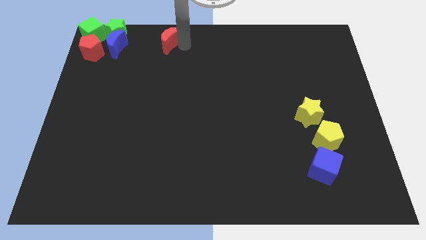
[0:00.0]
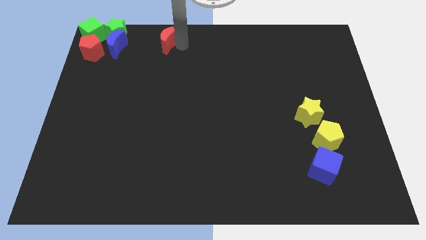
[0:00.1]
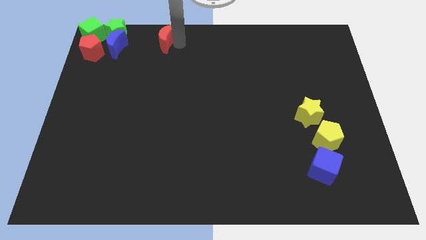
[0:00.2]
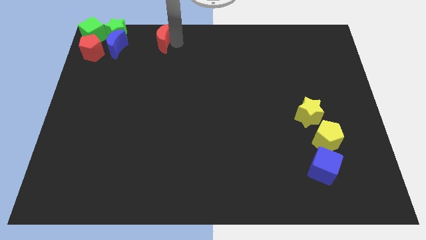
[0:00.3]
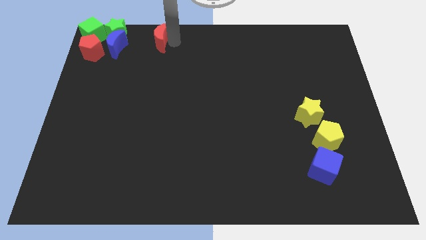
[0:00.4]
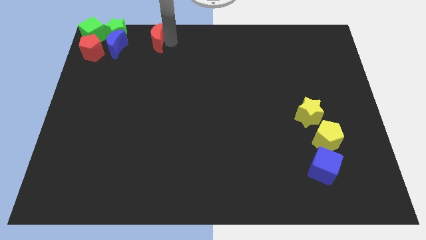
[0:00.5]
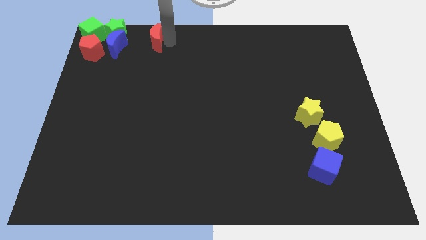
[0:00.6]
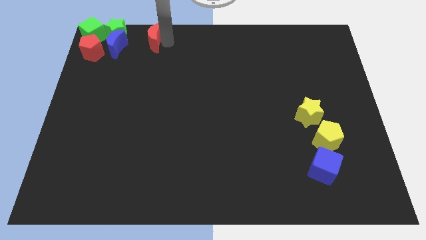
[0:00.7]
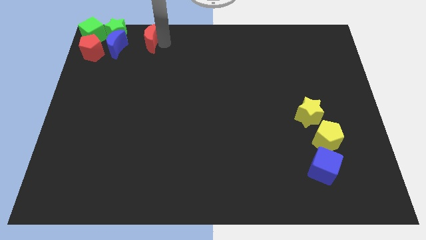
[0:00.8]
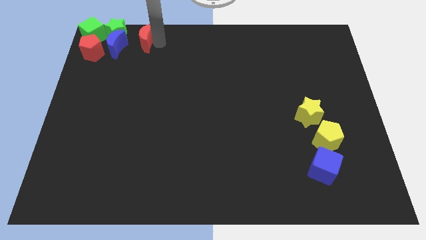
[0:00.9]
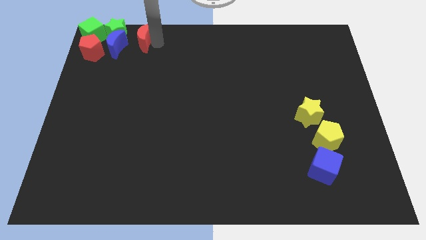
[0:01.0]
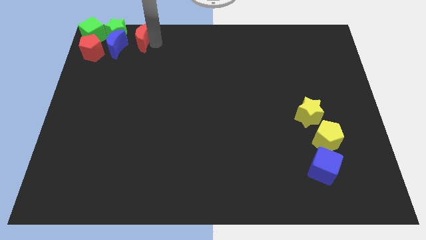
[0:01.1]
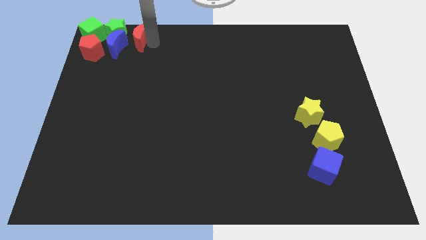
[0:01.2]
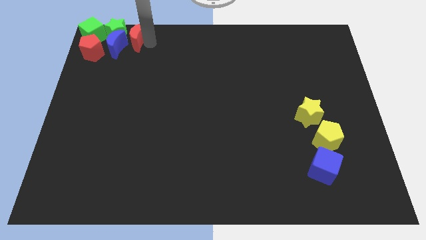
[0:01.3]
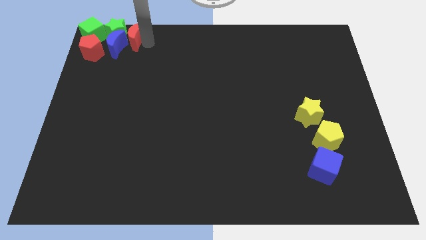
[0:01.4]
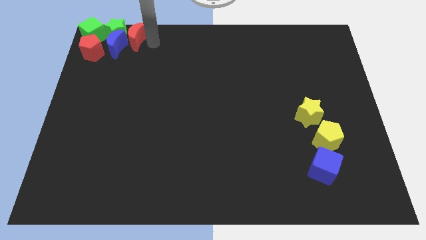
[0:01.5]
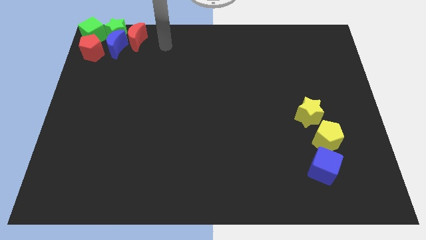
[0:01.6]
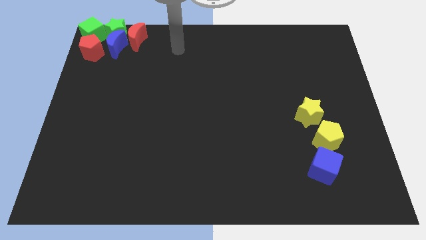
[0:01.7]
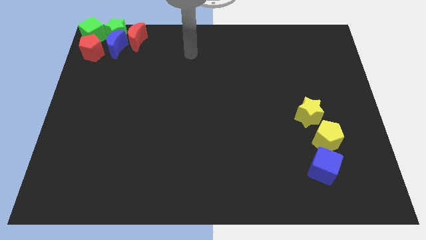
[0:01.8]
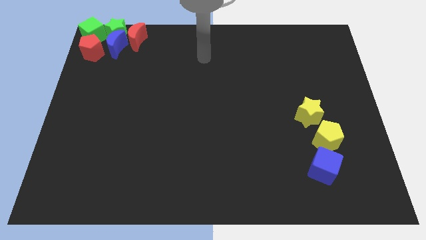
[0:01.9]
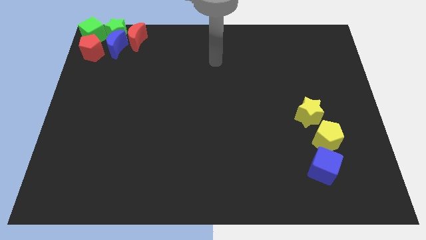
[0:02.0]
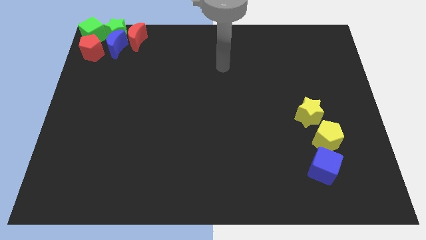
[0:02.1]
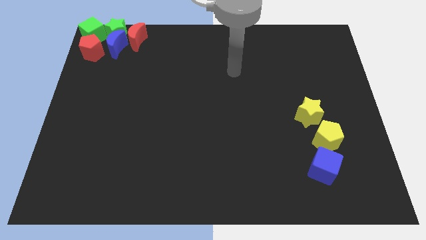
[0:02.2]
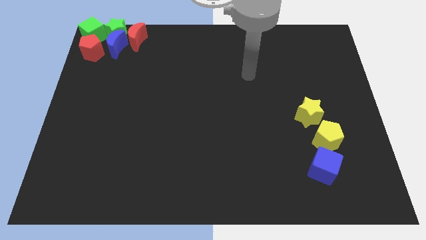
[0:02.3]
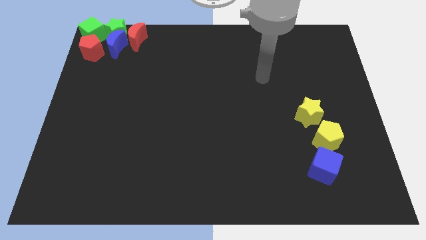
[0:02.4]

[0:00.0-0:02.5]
move the red crescent to the top left center of the board

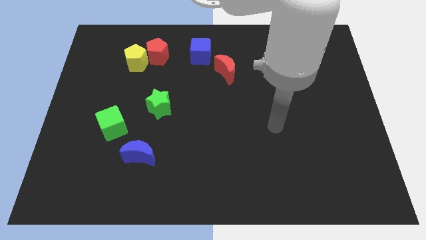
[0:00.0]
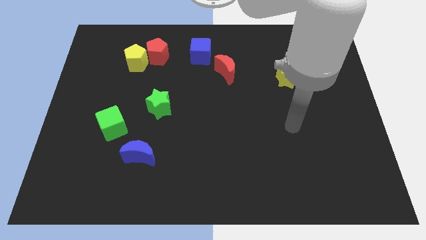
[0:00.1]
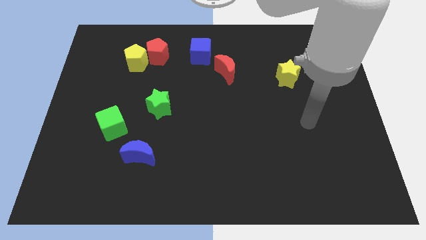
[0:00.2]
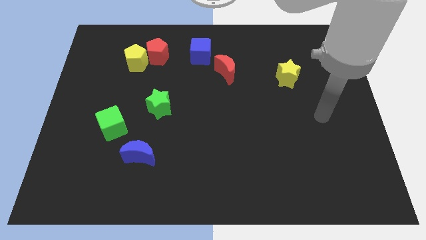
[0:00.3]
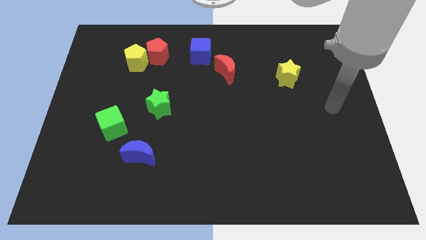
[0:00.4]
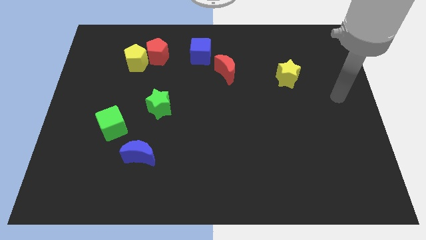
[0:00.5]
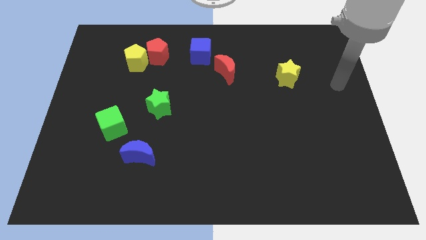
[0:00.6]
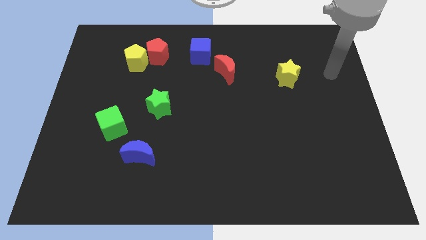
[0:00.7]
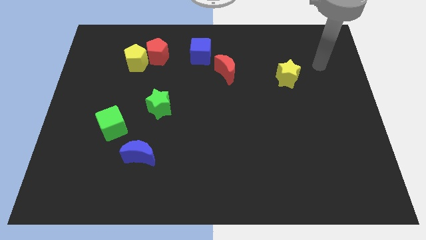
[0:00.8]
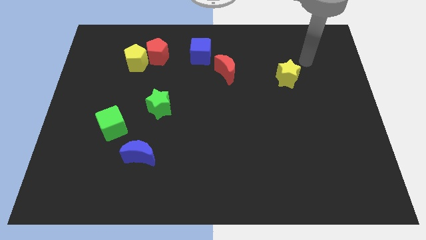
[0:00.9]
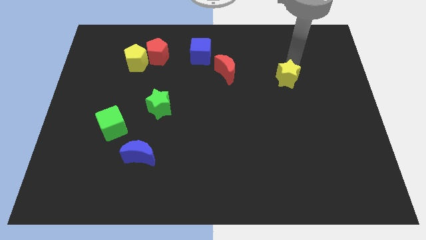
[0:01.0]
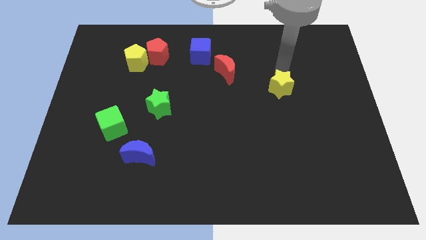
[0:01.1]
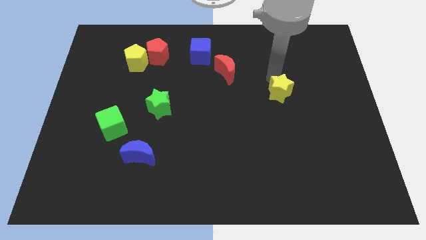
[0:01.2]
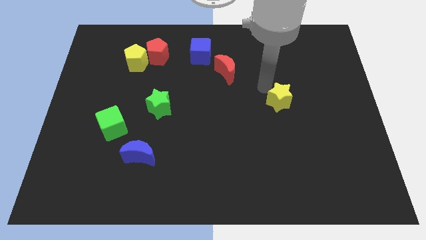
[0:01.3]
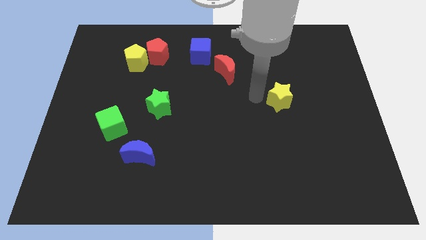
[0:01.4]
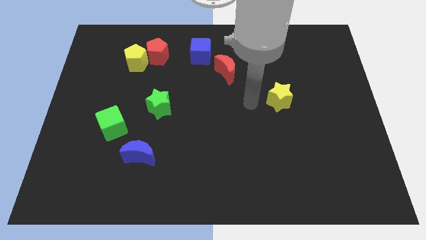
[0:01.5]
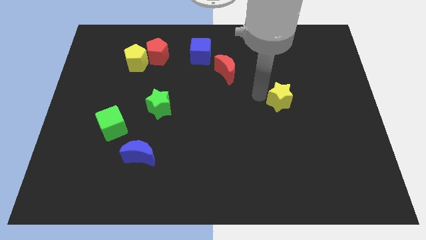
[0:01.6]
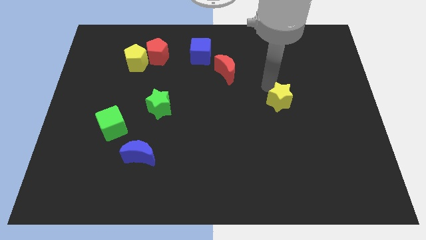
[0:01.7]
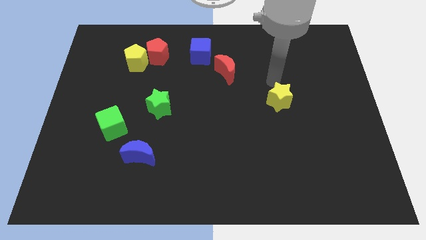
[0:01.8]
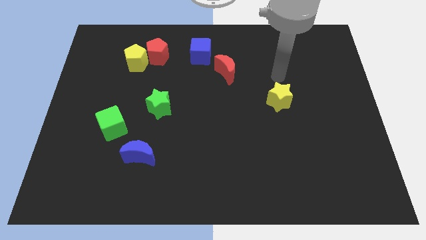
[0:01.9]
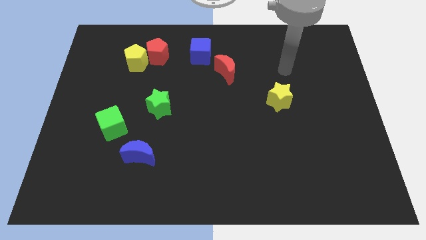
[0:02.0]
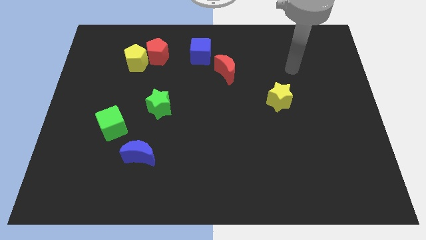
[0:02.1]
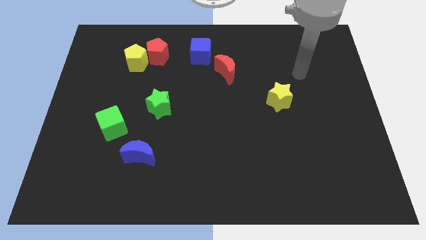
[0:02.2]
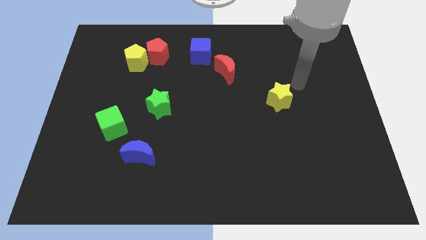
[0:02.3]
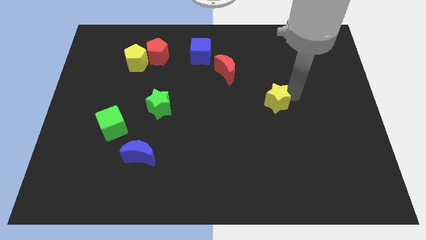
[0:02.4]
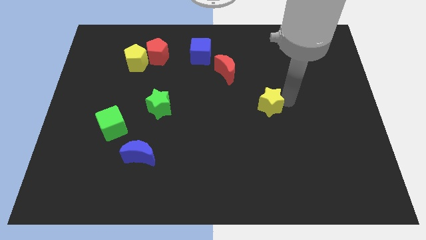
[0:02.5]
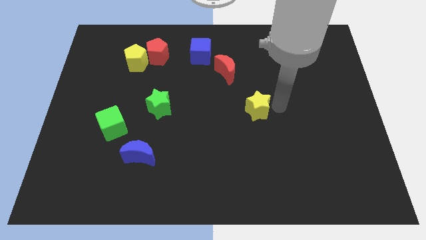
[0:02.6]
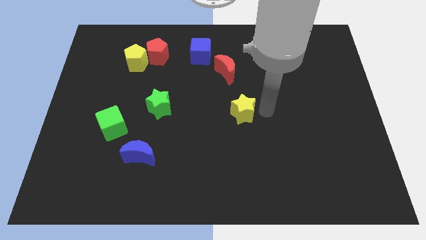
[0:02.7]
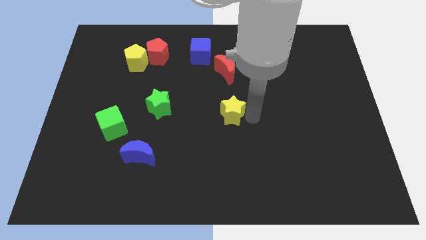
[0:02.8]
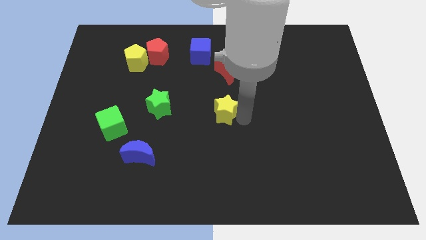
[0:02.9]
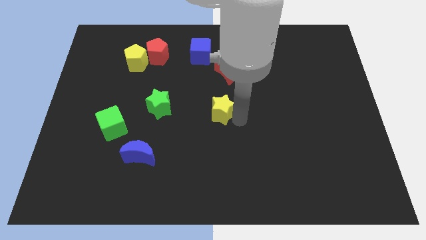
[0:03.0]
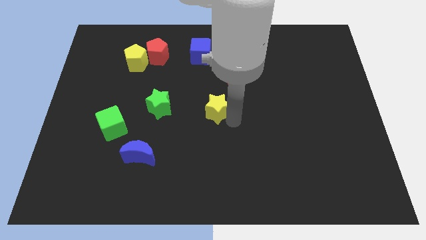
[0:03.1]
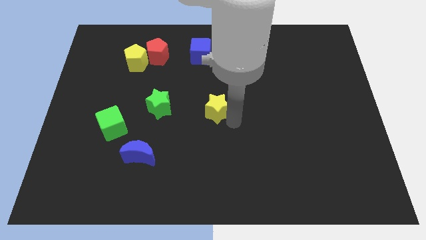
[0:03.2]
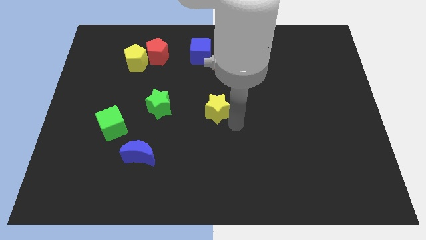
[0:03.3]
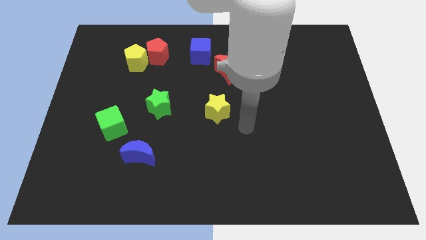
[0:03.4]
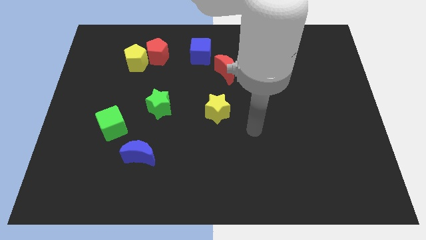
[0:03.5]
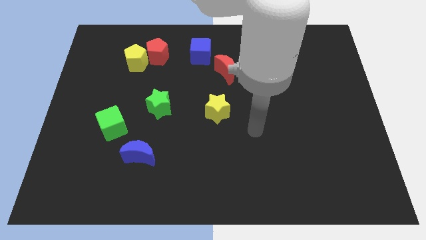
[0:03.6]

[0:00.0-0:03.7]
push the yellow star diagonally top right to blue moon

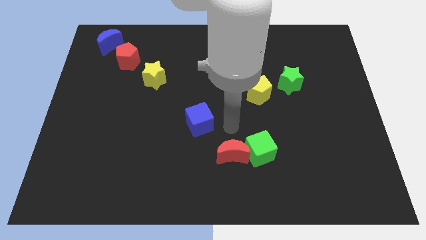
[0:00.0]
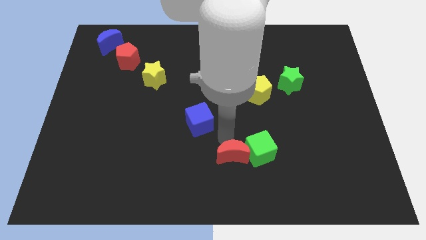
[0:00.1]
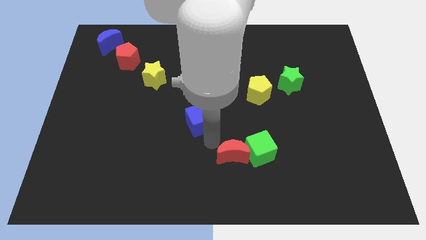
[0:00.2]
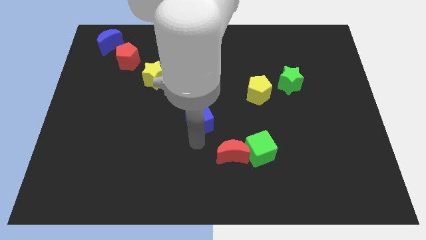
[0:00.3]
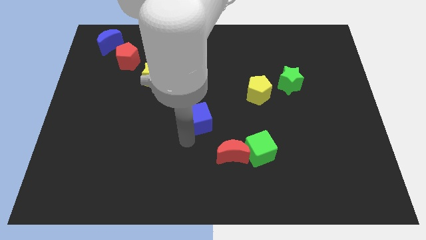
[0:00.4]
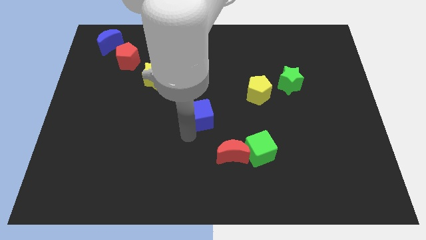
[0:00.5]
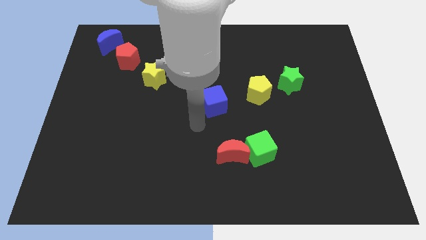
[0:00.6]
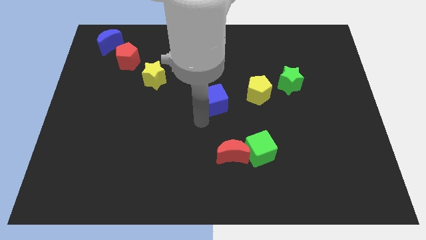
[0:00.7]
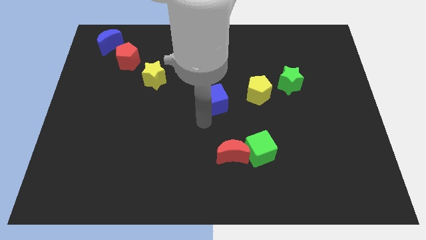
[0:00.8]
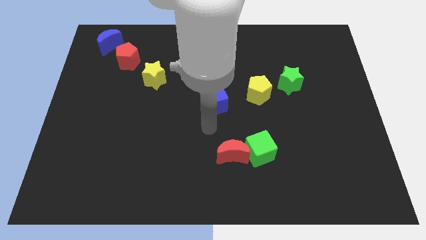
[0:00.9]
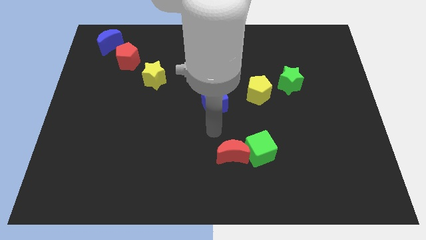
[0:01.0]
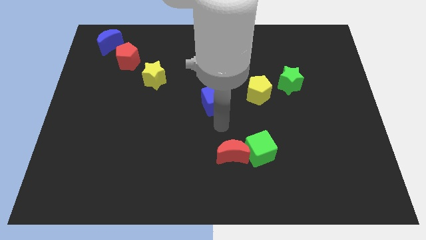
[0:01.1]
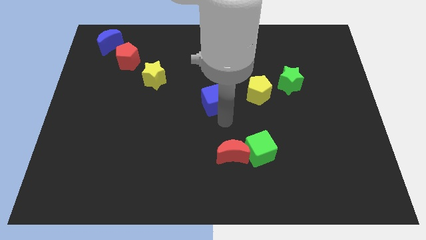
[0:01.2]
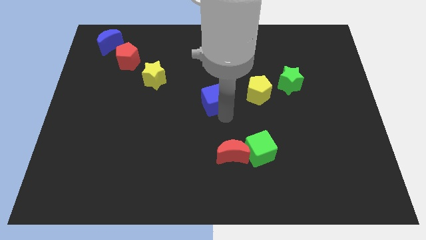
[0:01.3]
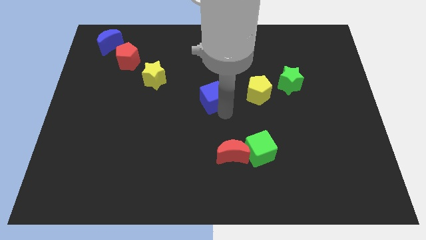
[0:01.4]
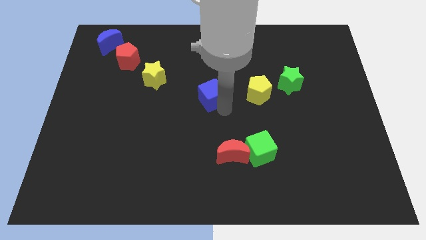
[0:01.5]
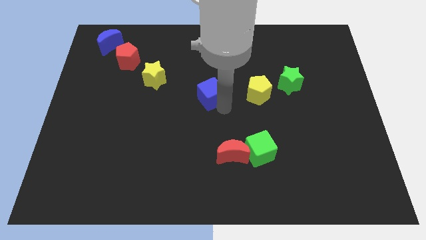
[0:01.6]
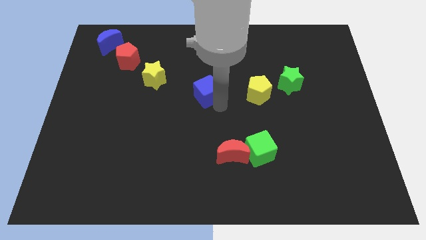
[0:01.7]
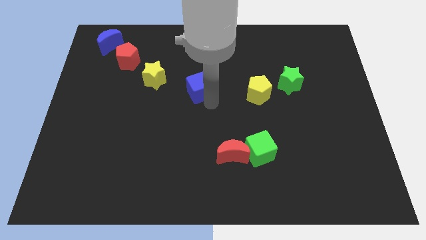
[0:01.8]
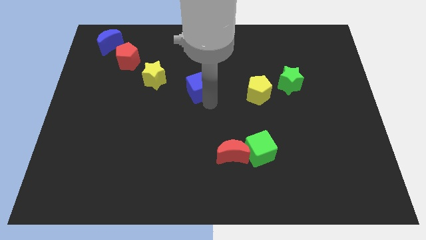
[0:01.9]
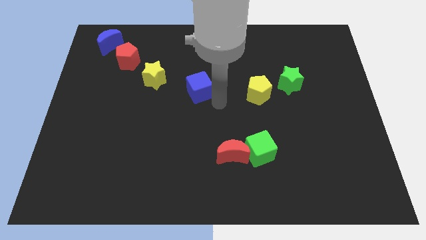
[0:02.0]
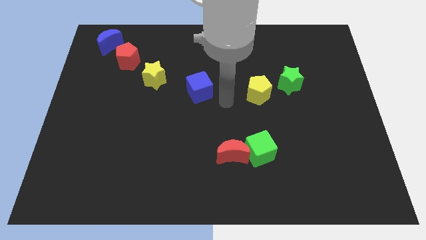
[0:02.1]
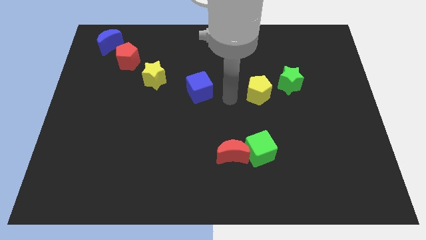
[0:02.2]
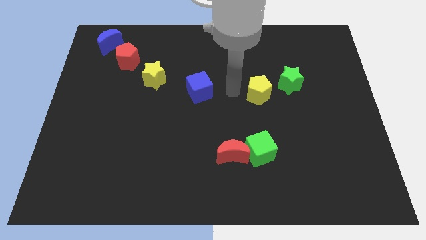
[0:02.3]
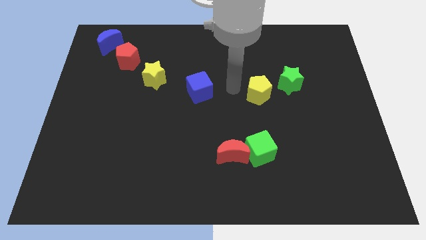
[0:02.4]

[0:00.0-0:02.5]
push blue cube upwards

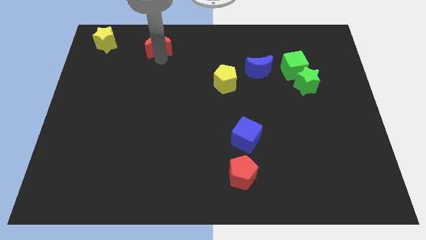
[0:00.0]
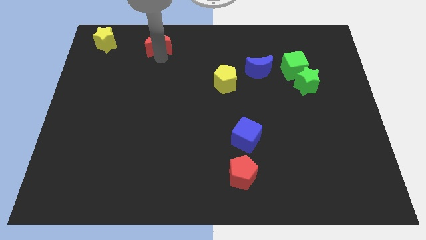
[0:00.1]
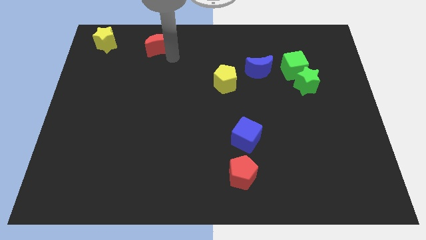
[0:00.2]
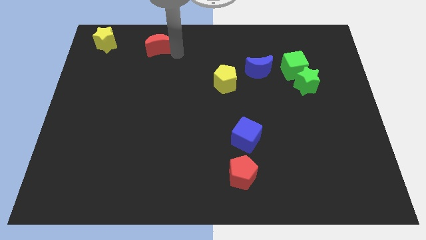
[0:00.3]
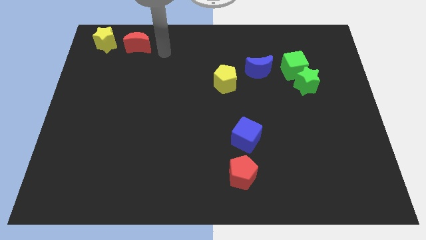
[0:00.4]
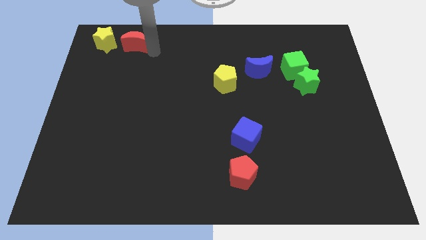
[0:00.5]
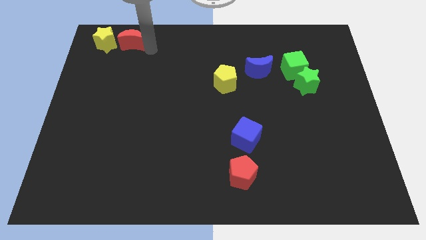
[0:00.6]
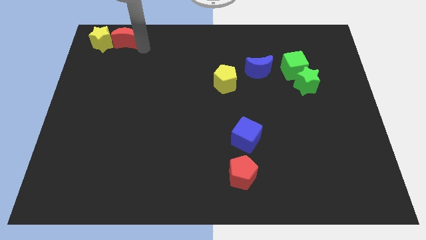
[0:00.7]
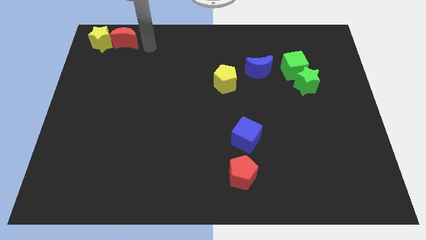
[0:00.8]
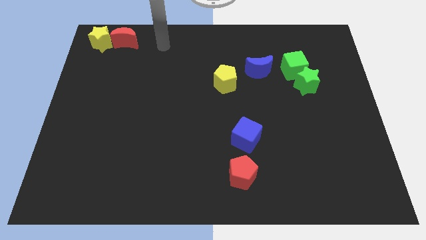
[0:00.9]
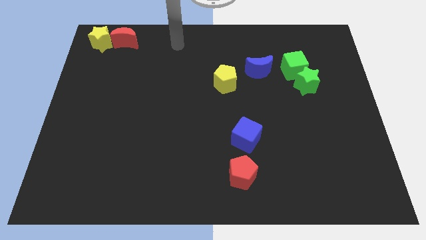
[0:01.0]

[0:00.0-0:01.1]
place red moon to the right of yellow star
